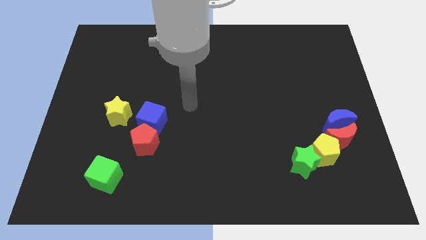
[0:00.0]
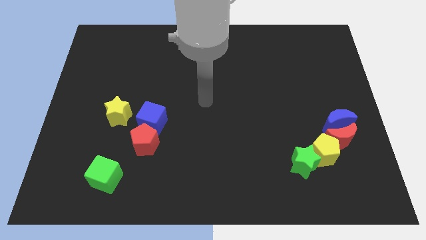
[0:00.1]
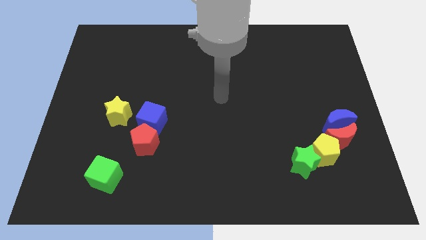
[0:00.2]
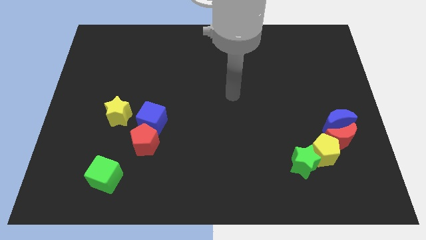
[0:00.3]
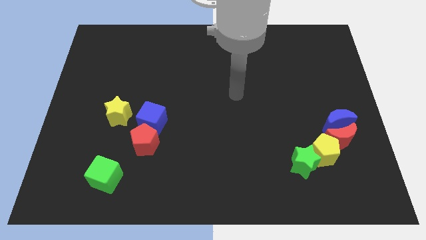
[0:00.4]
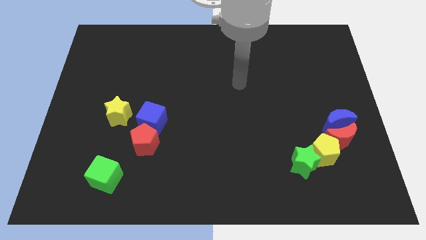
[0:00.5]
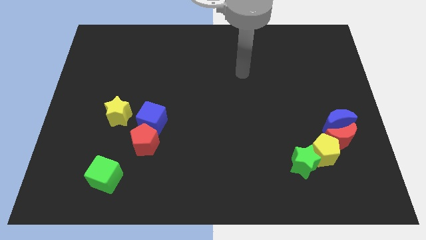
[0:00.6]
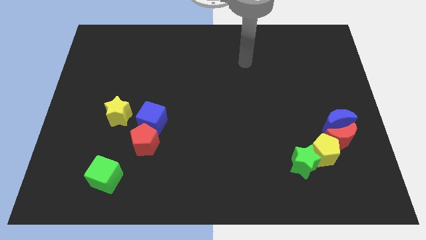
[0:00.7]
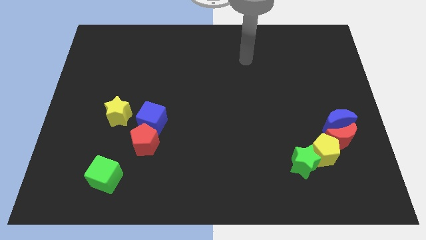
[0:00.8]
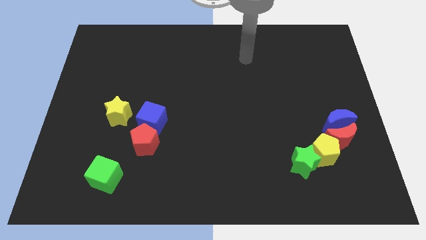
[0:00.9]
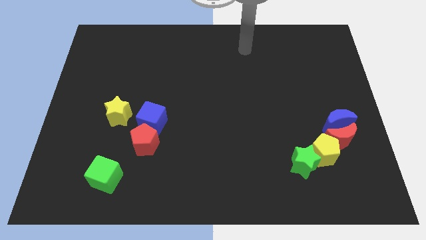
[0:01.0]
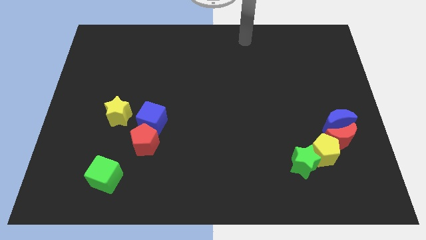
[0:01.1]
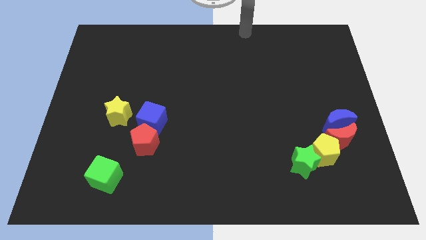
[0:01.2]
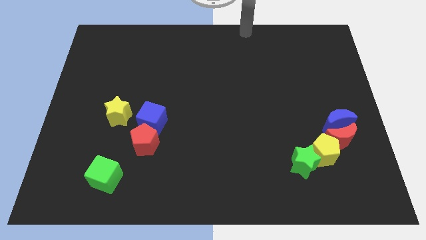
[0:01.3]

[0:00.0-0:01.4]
move your arm towards the top center of the board

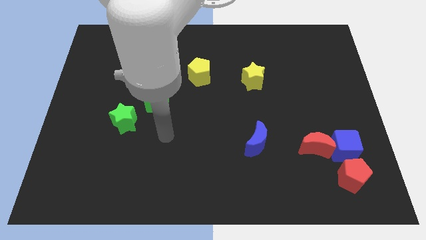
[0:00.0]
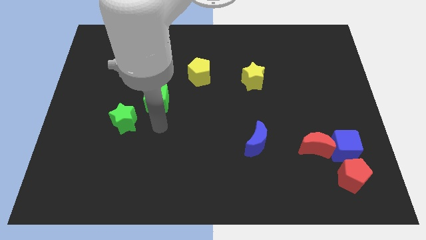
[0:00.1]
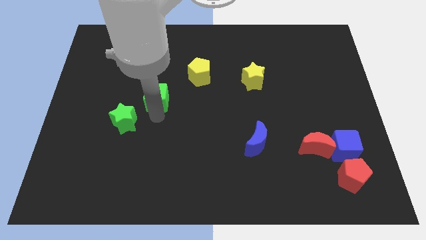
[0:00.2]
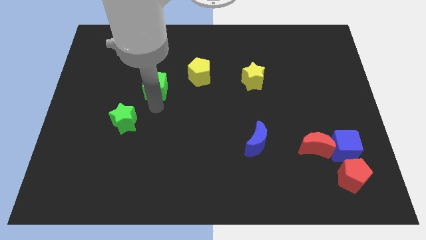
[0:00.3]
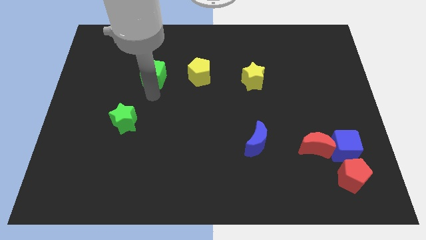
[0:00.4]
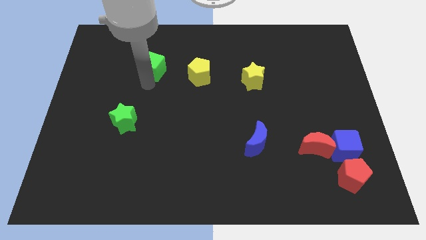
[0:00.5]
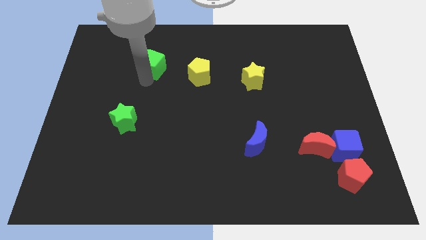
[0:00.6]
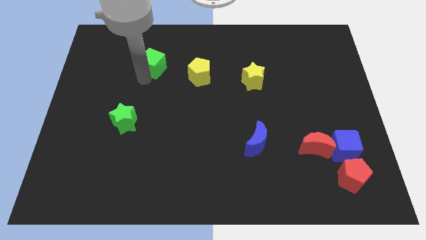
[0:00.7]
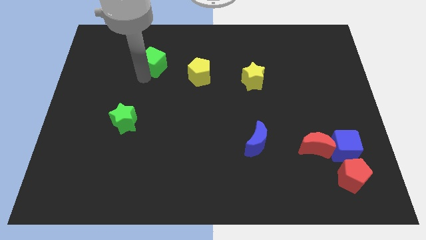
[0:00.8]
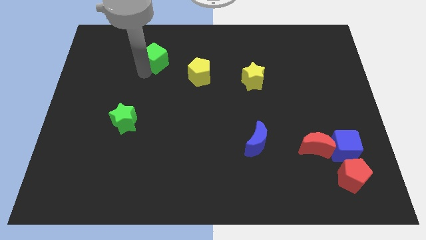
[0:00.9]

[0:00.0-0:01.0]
place the green cube diagonal to the green star

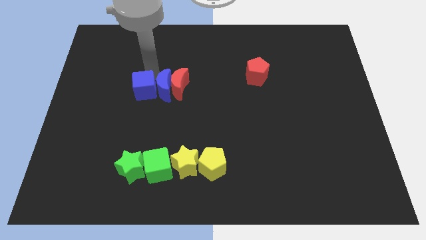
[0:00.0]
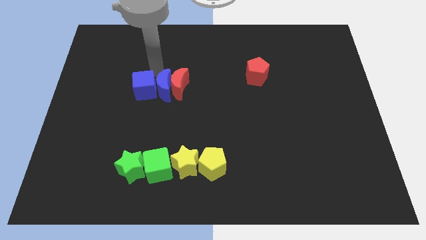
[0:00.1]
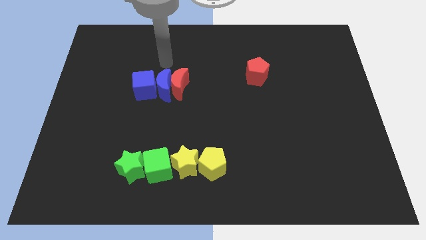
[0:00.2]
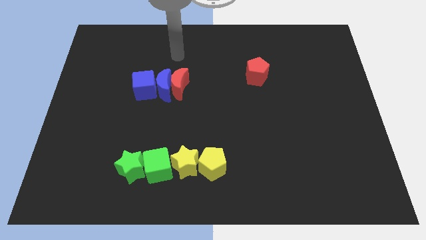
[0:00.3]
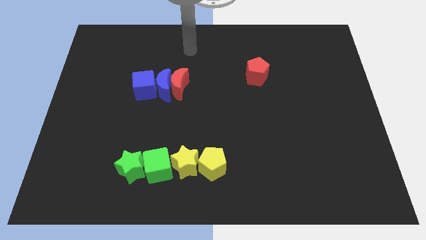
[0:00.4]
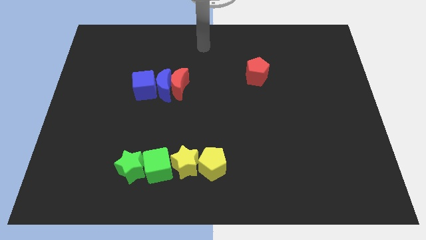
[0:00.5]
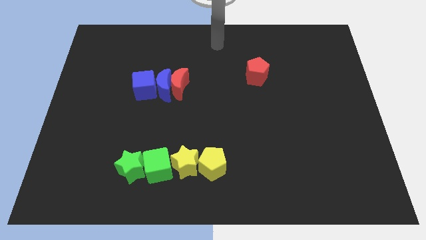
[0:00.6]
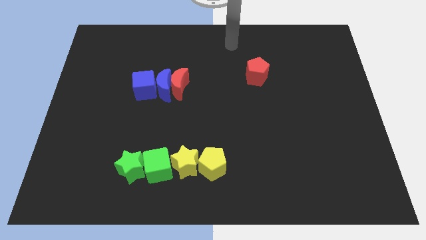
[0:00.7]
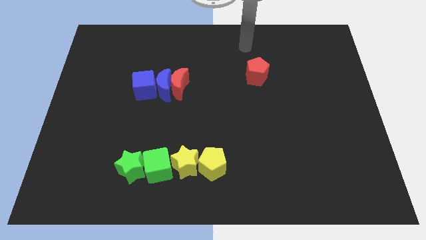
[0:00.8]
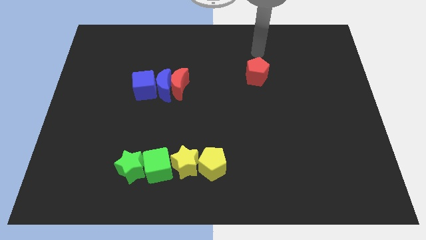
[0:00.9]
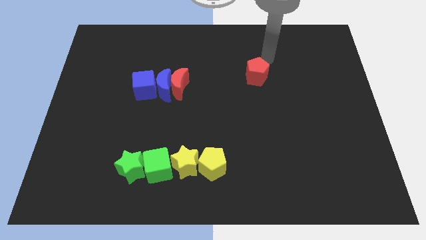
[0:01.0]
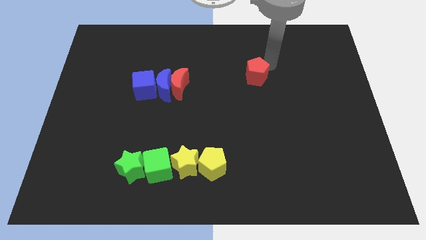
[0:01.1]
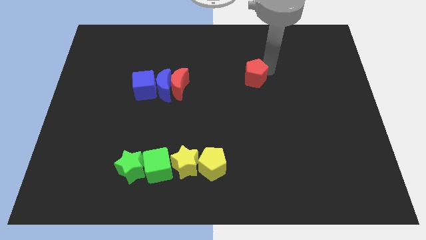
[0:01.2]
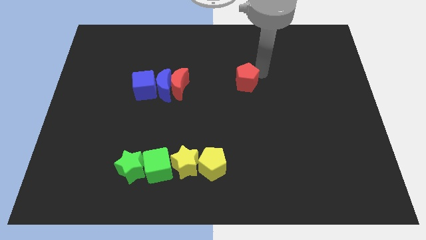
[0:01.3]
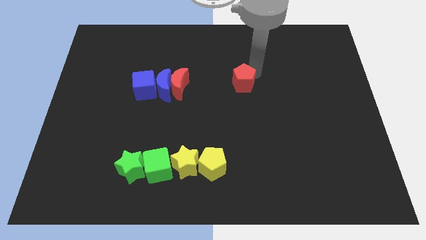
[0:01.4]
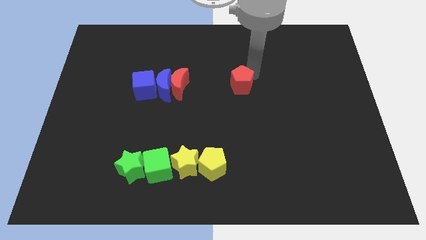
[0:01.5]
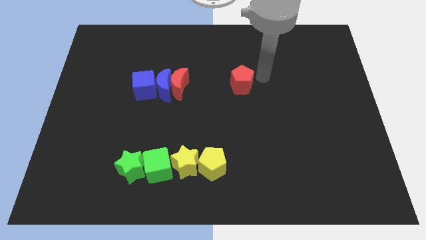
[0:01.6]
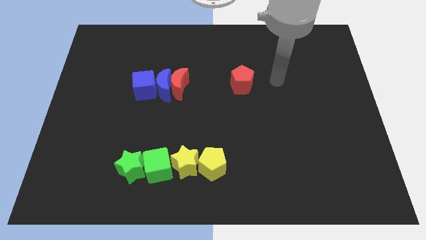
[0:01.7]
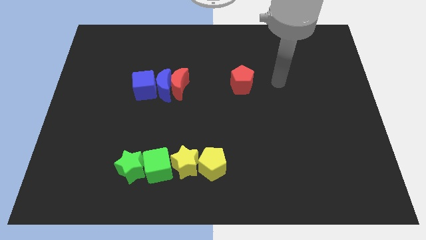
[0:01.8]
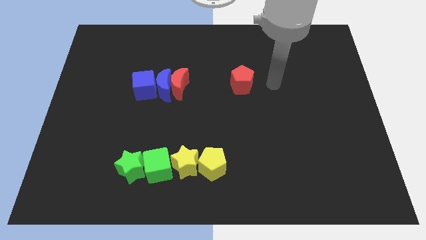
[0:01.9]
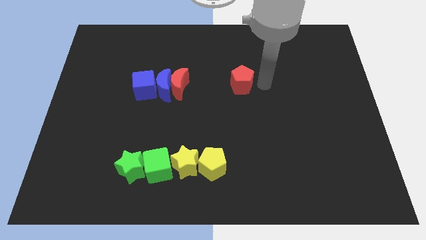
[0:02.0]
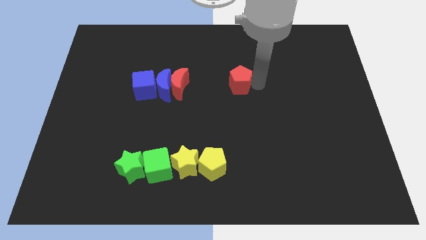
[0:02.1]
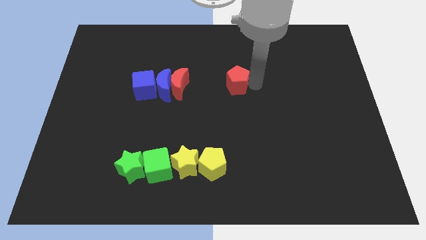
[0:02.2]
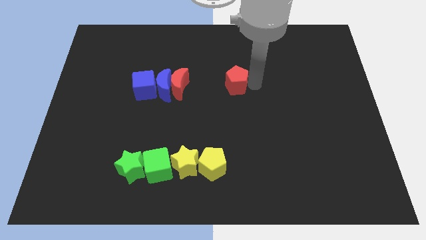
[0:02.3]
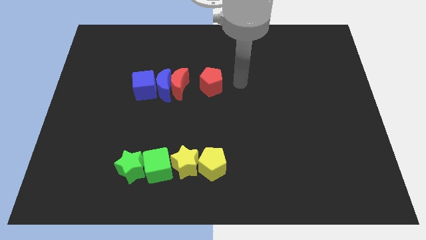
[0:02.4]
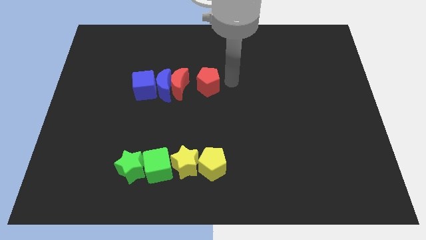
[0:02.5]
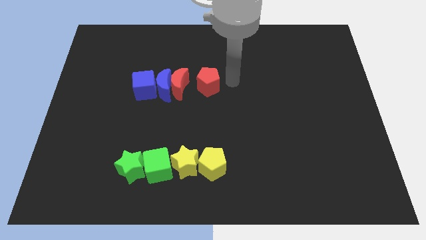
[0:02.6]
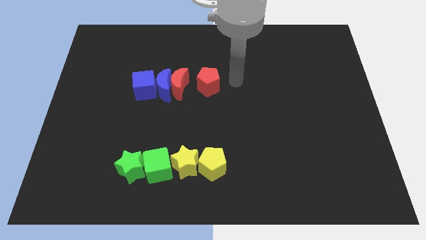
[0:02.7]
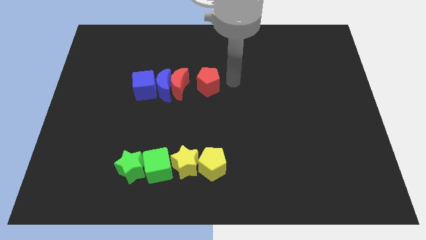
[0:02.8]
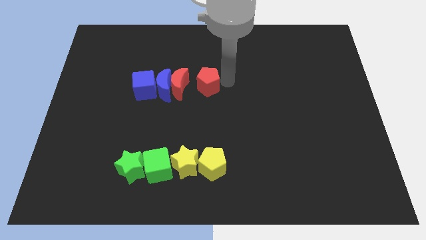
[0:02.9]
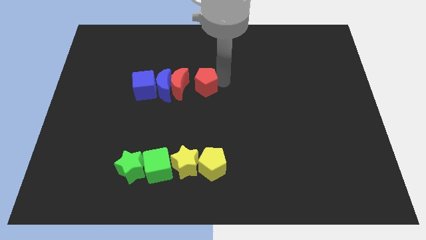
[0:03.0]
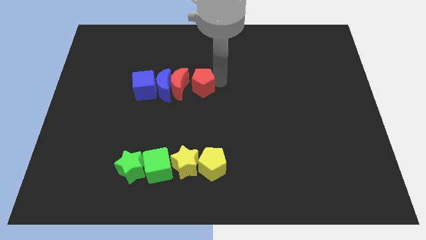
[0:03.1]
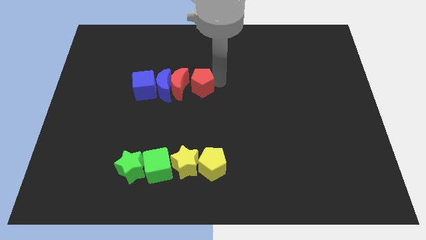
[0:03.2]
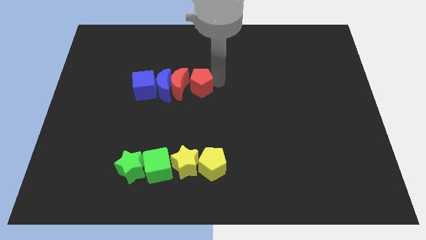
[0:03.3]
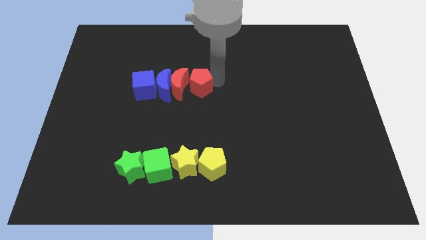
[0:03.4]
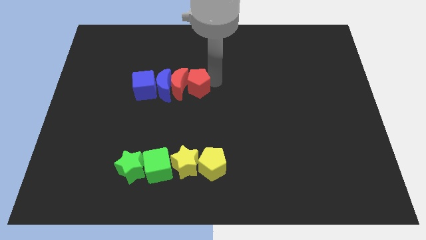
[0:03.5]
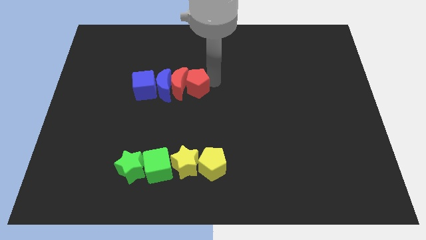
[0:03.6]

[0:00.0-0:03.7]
go and push the red pentagon towards red crescent

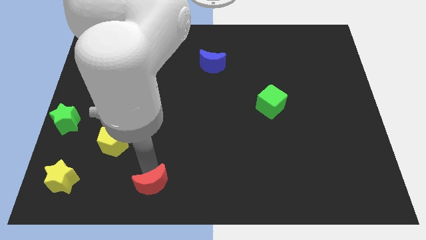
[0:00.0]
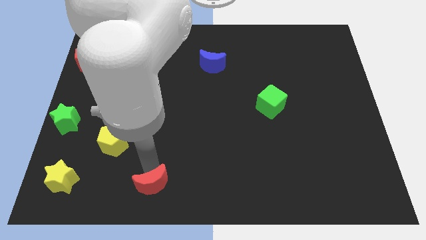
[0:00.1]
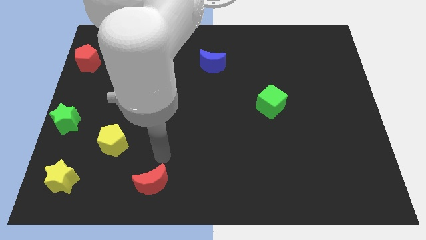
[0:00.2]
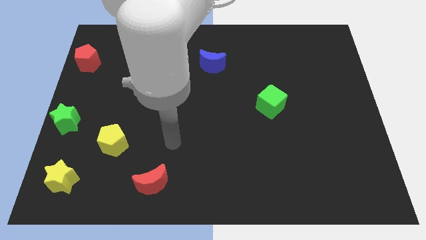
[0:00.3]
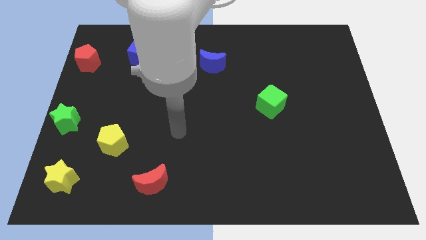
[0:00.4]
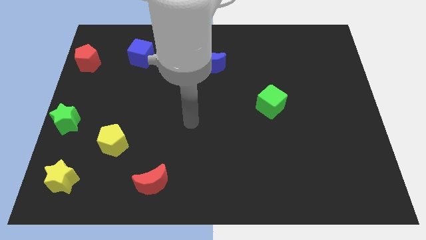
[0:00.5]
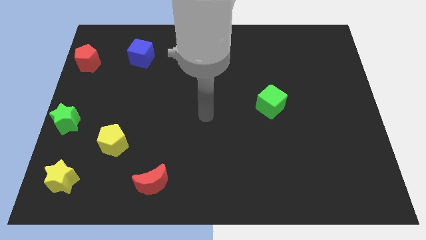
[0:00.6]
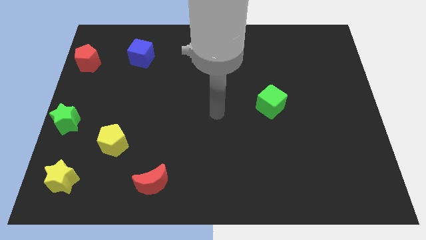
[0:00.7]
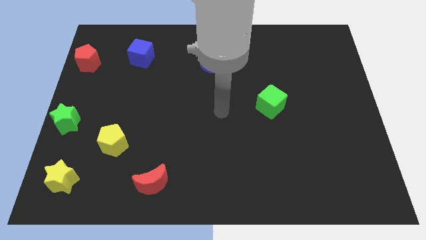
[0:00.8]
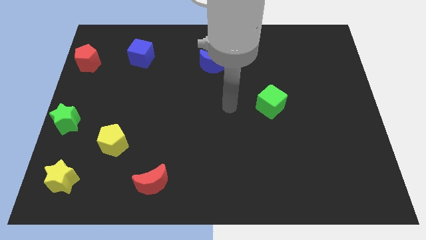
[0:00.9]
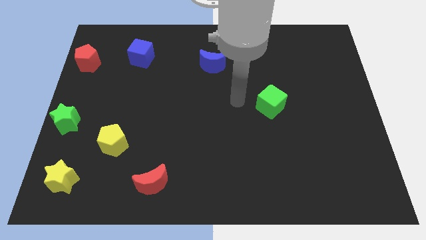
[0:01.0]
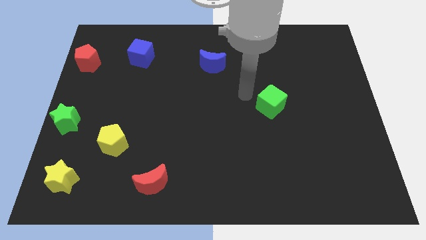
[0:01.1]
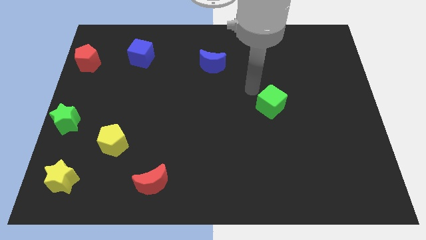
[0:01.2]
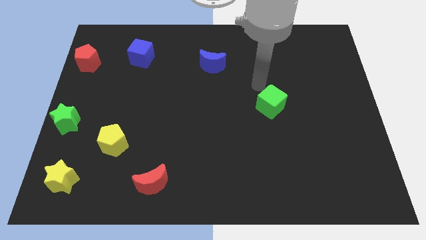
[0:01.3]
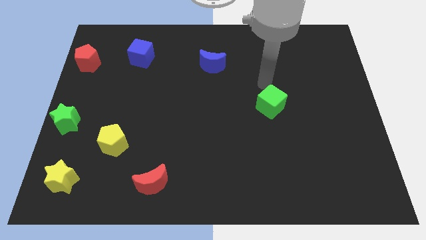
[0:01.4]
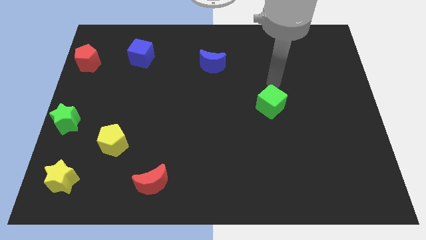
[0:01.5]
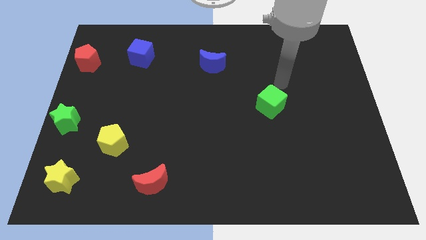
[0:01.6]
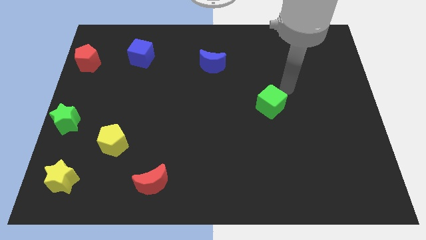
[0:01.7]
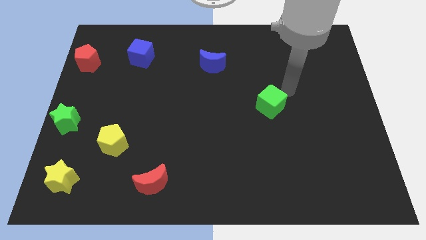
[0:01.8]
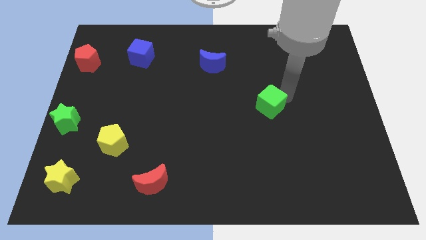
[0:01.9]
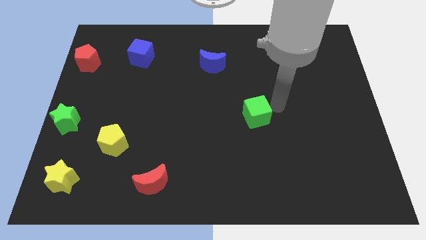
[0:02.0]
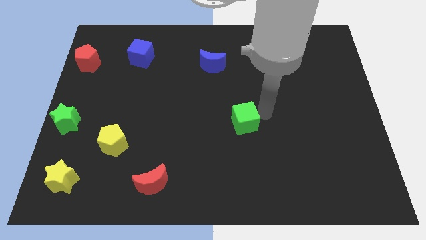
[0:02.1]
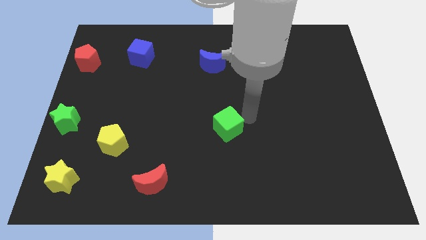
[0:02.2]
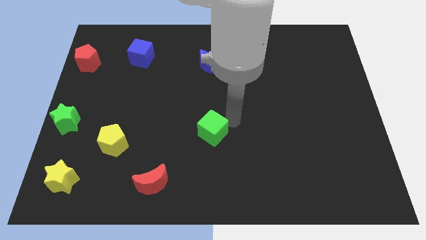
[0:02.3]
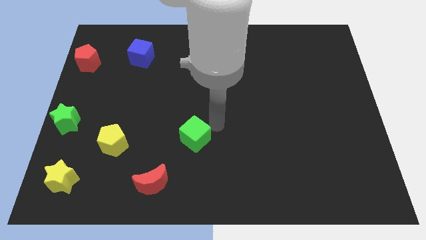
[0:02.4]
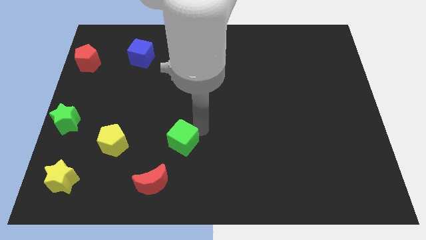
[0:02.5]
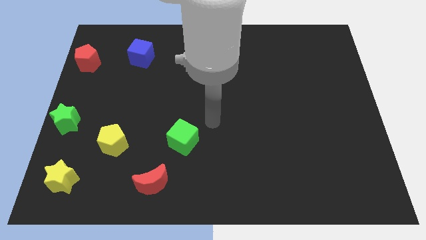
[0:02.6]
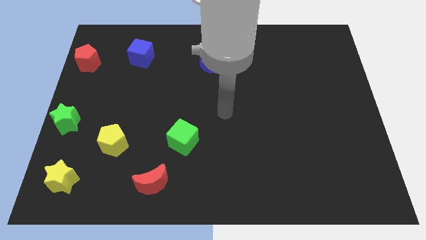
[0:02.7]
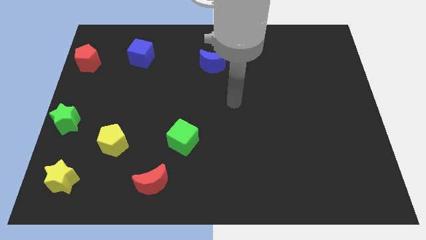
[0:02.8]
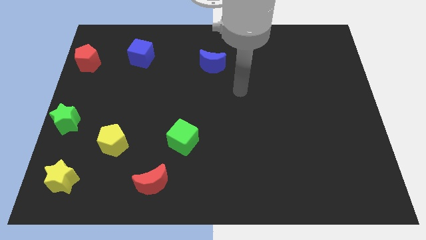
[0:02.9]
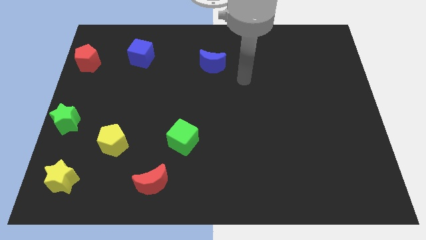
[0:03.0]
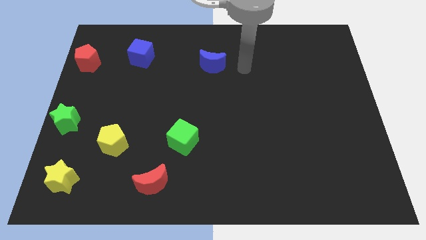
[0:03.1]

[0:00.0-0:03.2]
put the green cube diagonally above the top right side of the red moon
